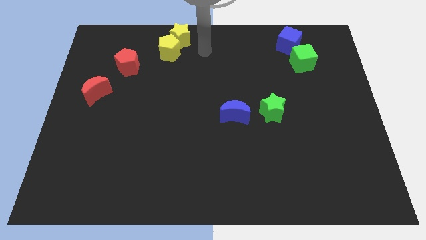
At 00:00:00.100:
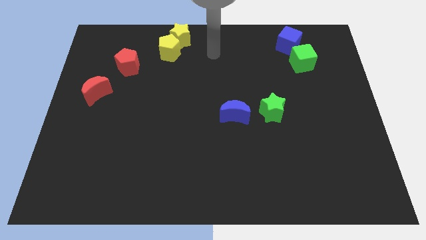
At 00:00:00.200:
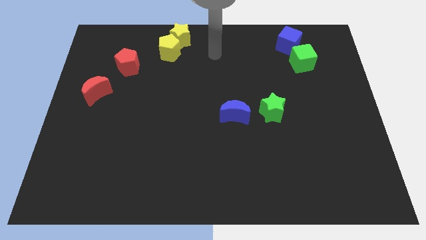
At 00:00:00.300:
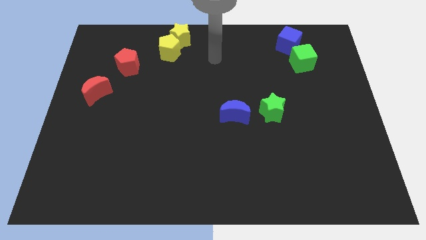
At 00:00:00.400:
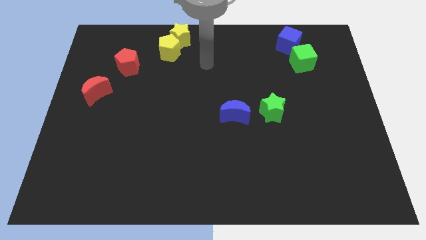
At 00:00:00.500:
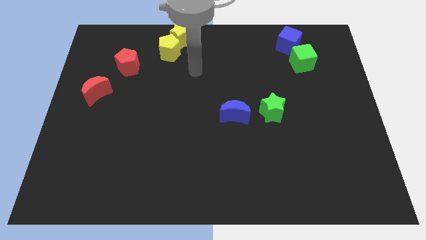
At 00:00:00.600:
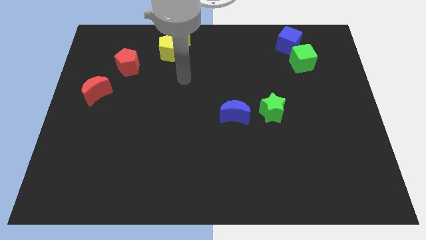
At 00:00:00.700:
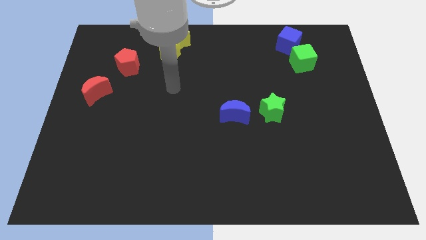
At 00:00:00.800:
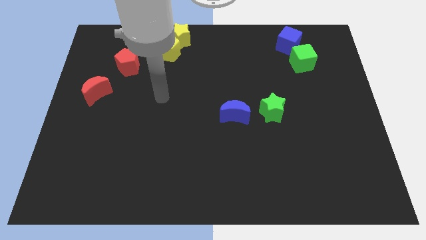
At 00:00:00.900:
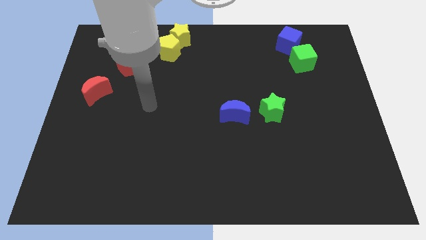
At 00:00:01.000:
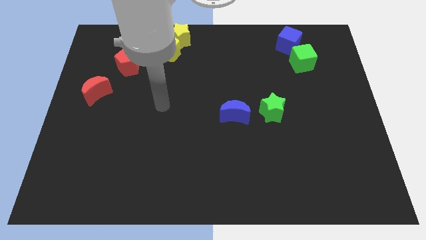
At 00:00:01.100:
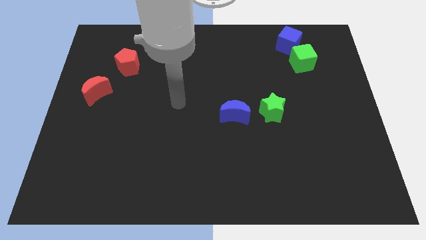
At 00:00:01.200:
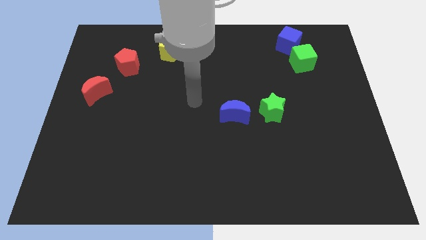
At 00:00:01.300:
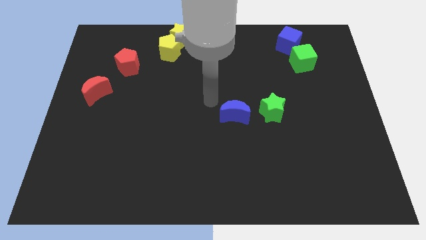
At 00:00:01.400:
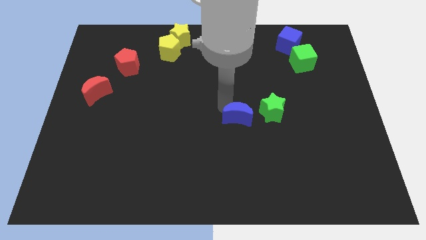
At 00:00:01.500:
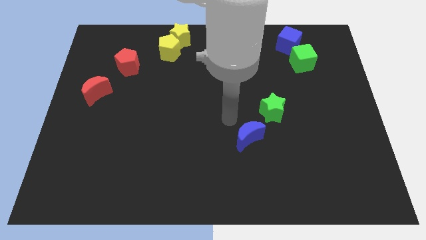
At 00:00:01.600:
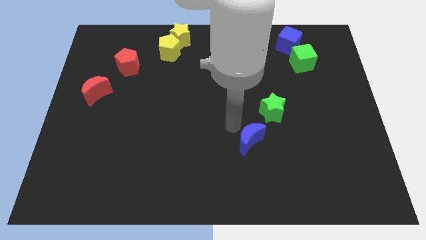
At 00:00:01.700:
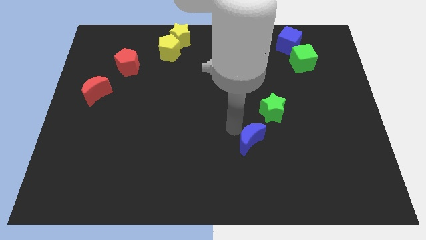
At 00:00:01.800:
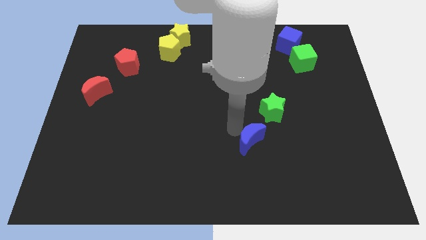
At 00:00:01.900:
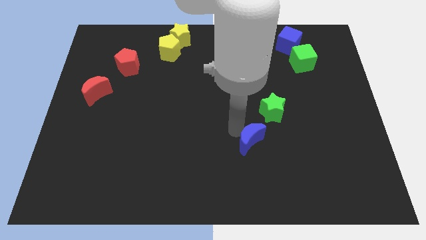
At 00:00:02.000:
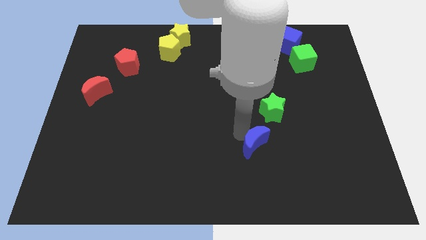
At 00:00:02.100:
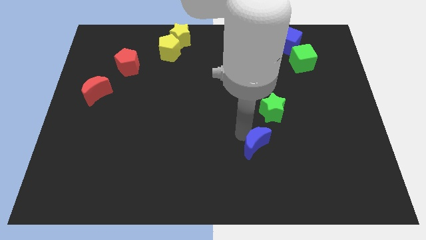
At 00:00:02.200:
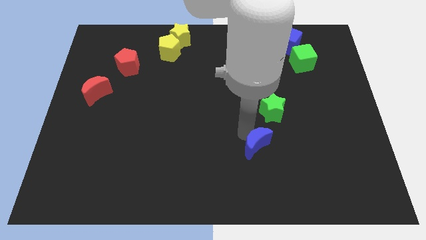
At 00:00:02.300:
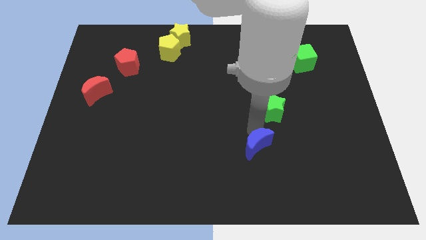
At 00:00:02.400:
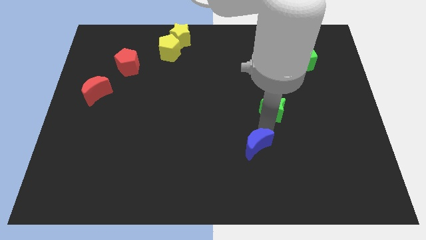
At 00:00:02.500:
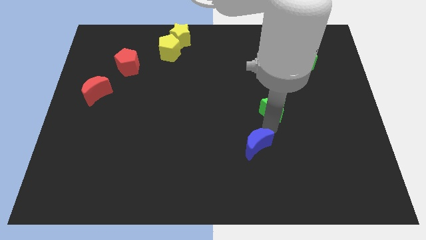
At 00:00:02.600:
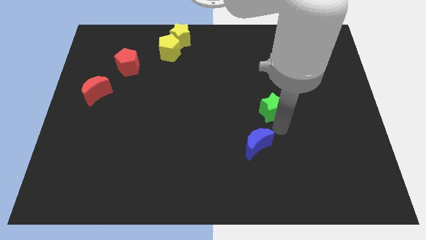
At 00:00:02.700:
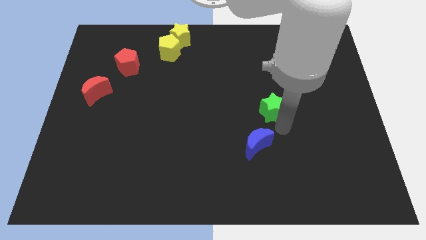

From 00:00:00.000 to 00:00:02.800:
move the blue crescent below the green star

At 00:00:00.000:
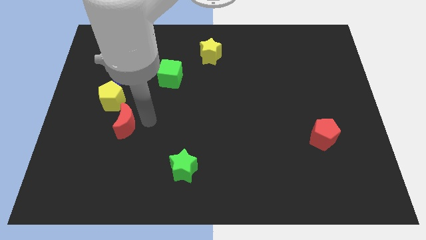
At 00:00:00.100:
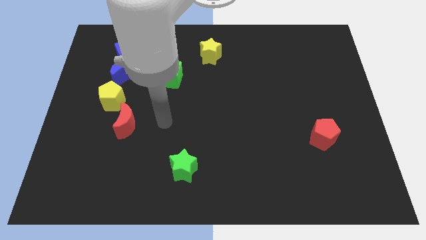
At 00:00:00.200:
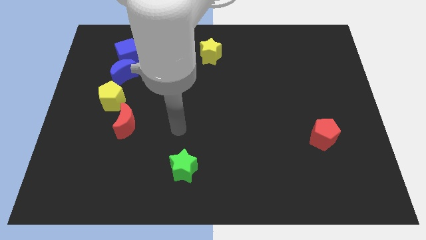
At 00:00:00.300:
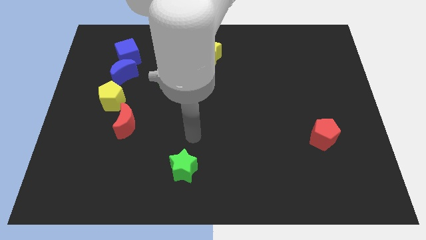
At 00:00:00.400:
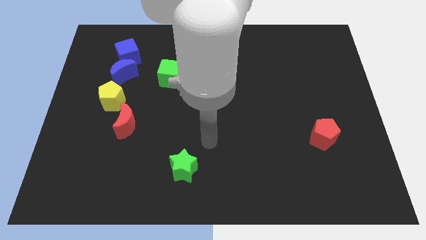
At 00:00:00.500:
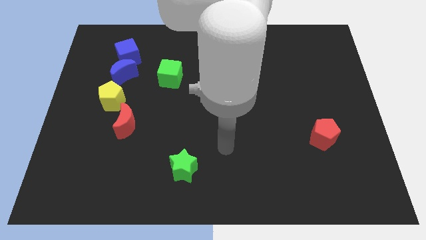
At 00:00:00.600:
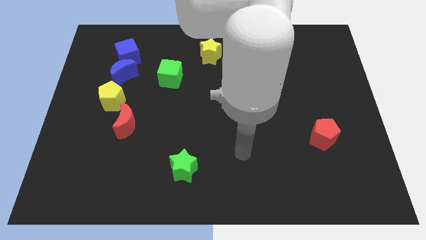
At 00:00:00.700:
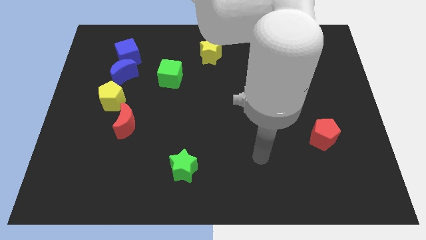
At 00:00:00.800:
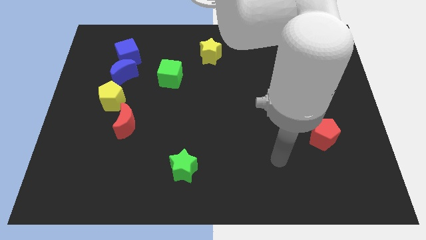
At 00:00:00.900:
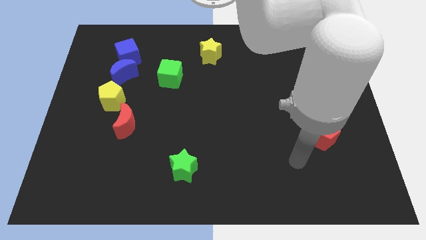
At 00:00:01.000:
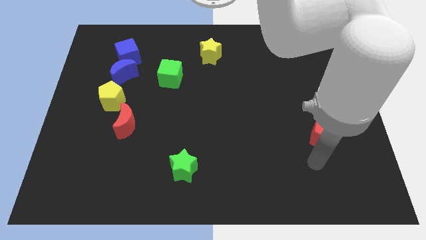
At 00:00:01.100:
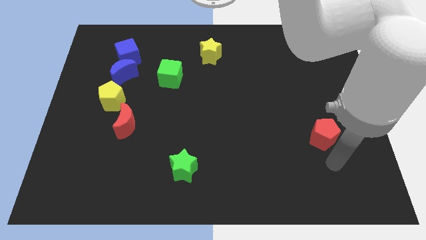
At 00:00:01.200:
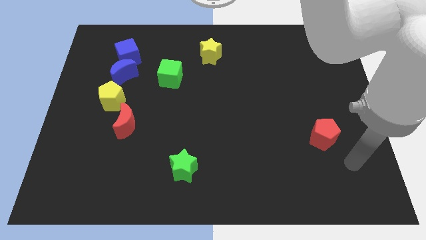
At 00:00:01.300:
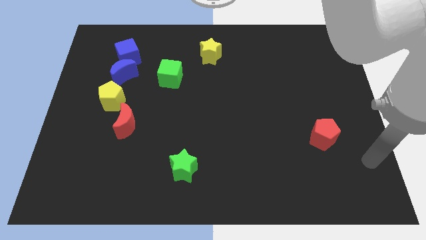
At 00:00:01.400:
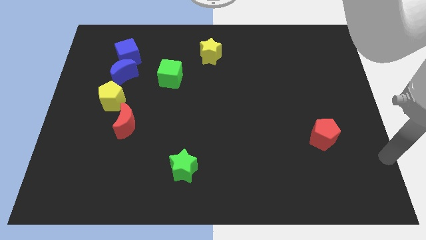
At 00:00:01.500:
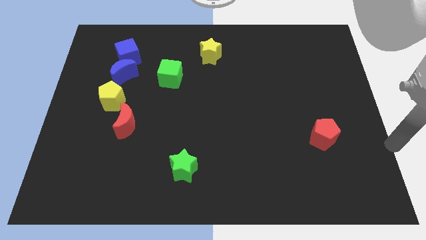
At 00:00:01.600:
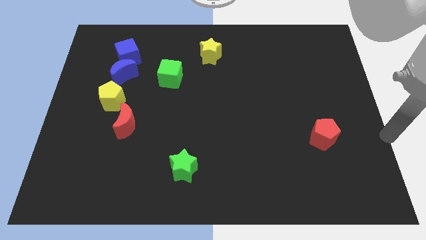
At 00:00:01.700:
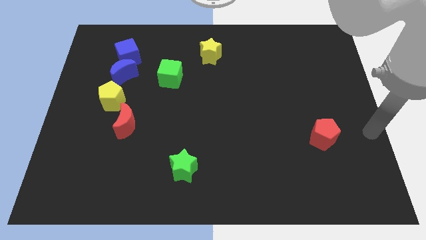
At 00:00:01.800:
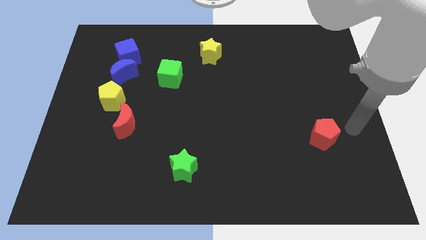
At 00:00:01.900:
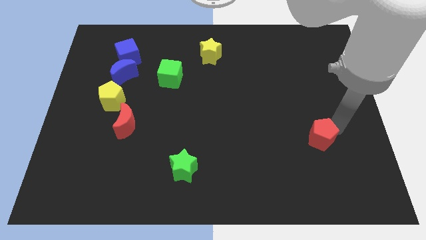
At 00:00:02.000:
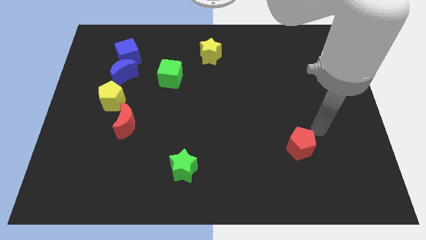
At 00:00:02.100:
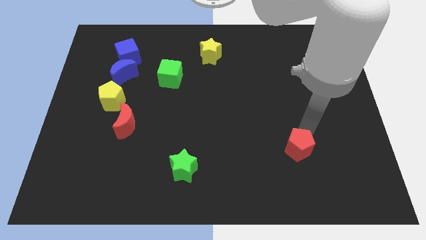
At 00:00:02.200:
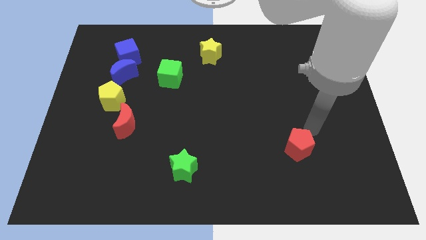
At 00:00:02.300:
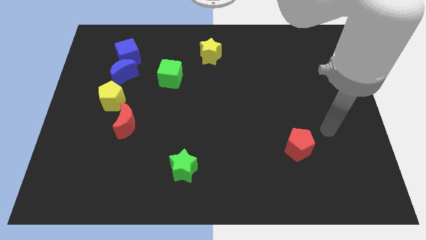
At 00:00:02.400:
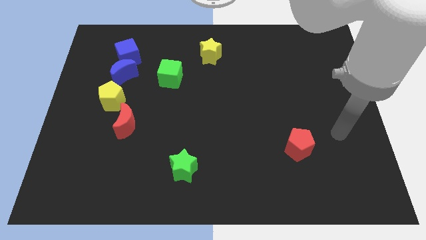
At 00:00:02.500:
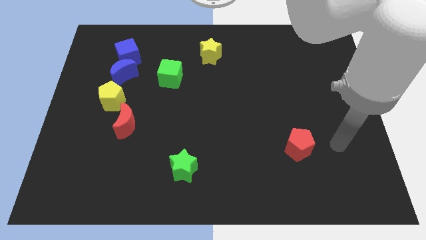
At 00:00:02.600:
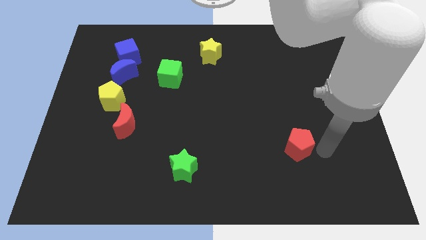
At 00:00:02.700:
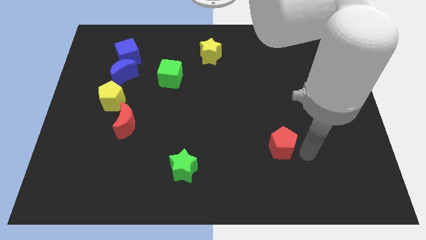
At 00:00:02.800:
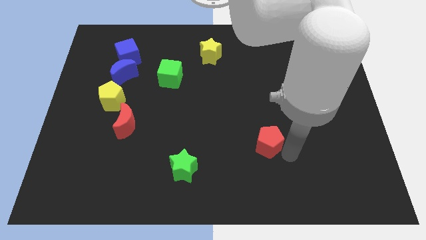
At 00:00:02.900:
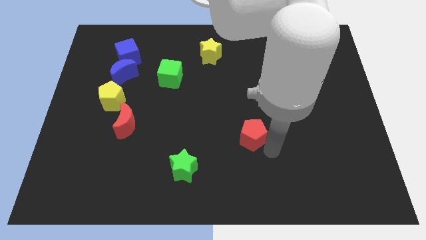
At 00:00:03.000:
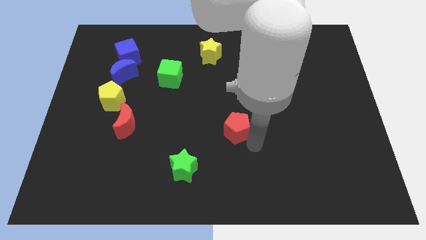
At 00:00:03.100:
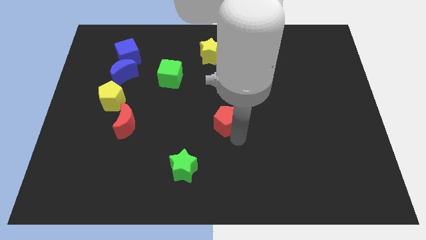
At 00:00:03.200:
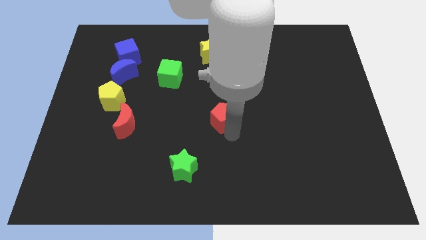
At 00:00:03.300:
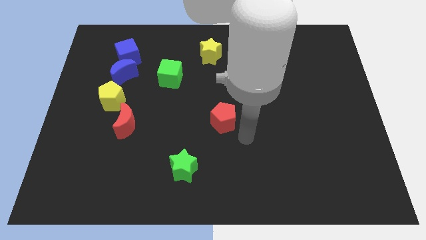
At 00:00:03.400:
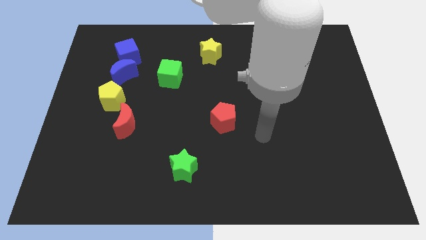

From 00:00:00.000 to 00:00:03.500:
place the red pentagon at the top right side of the green star

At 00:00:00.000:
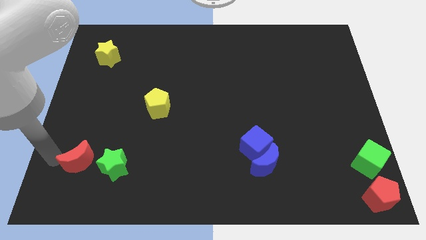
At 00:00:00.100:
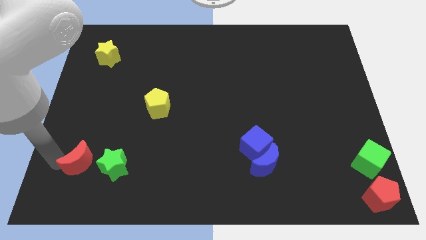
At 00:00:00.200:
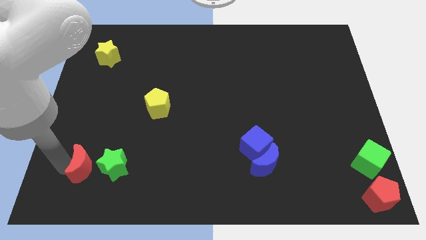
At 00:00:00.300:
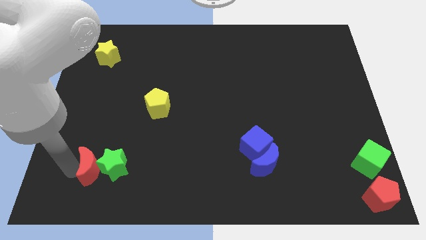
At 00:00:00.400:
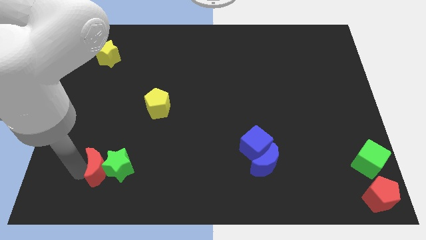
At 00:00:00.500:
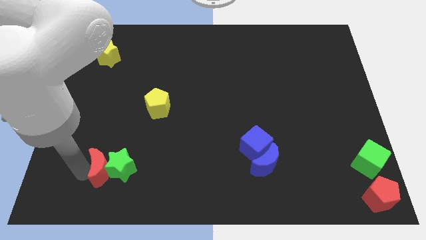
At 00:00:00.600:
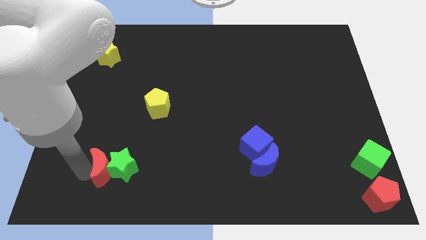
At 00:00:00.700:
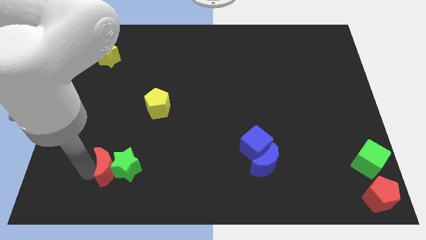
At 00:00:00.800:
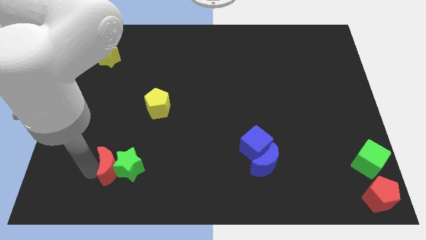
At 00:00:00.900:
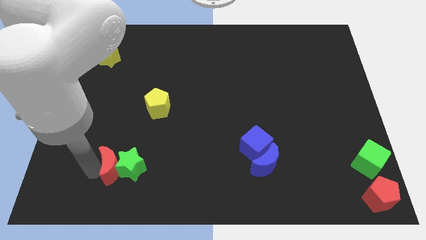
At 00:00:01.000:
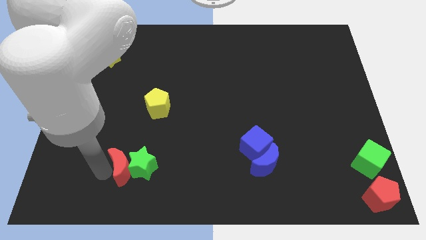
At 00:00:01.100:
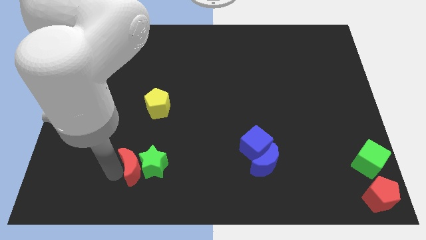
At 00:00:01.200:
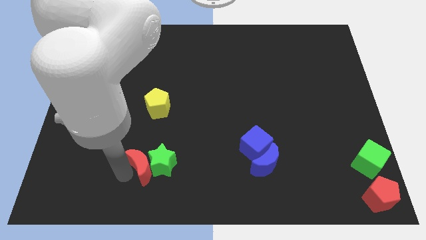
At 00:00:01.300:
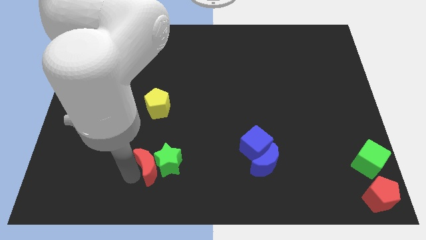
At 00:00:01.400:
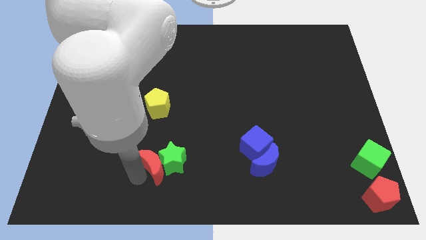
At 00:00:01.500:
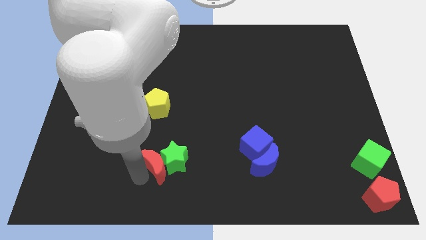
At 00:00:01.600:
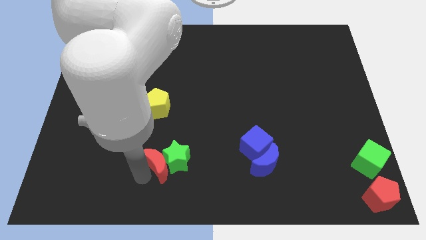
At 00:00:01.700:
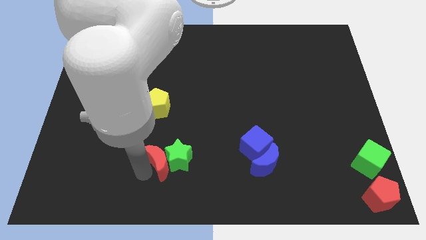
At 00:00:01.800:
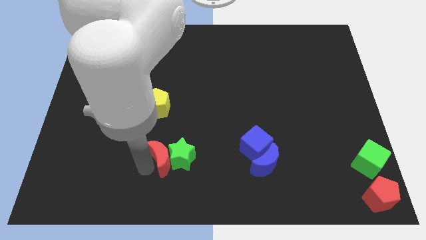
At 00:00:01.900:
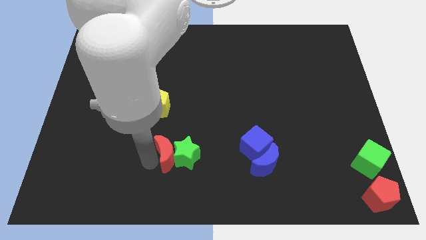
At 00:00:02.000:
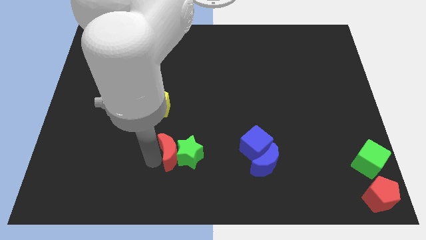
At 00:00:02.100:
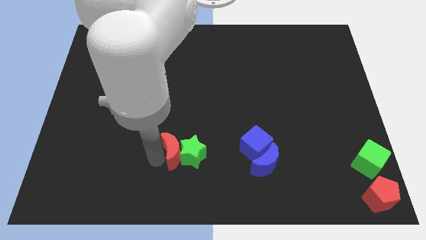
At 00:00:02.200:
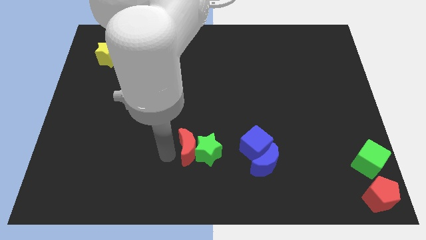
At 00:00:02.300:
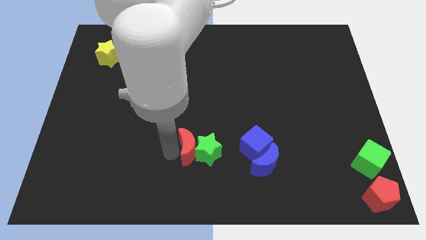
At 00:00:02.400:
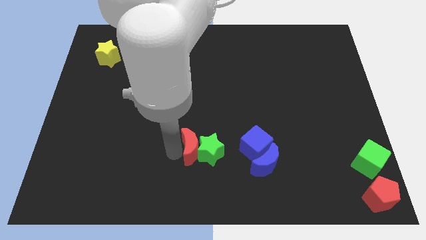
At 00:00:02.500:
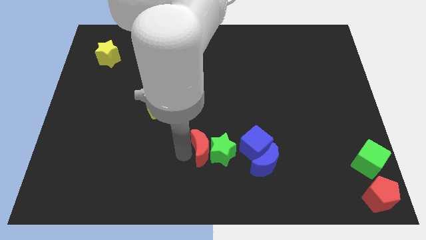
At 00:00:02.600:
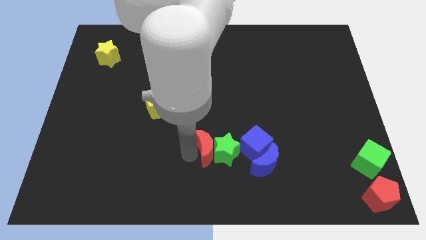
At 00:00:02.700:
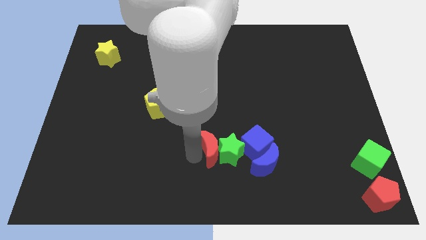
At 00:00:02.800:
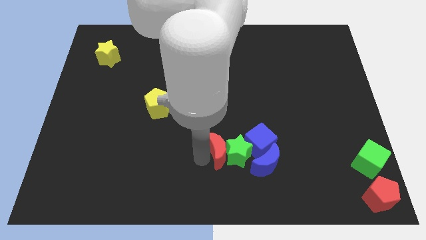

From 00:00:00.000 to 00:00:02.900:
move the green star with the red crescent into the blue cube
